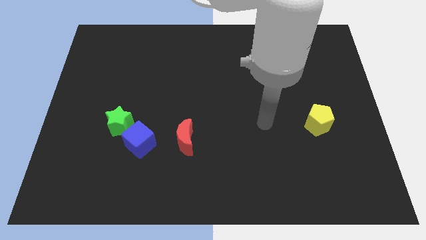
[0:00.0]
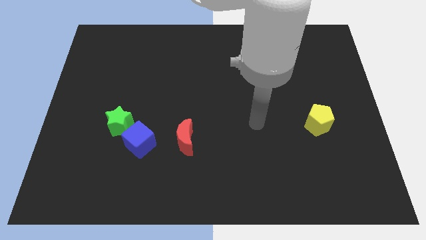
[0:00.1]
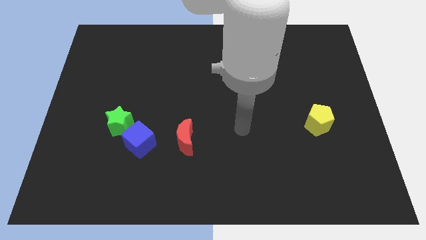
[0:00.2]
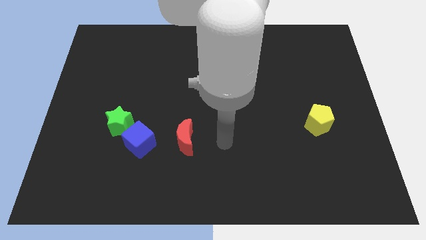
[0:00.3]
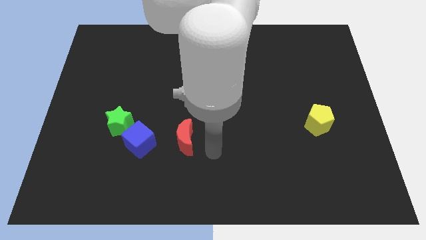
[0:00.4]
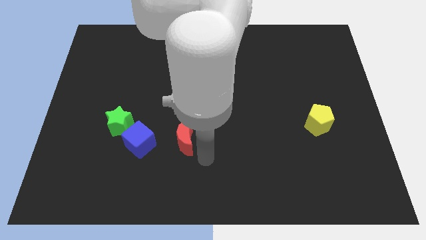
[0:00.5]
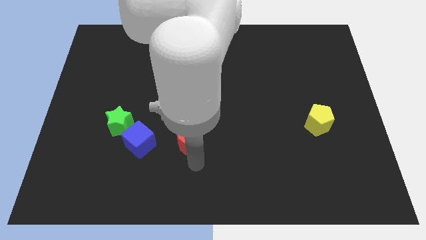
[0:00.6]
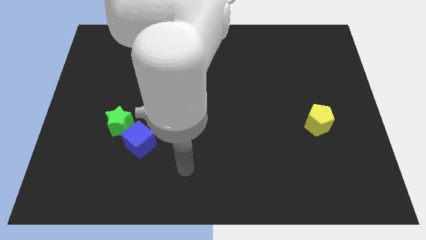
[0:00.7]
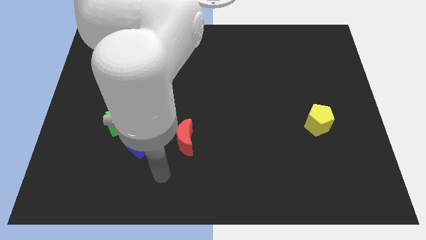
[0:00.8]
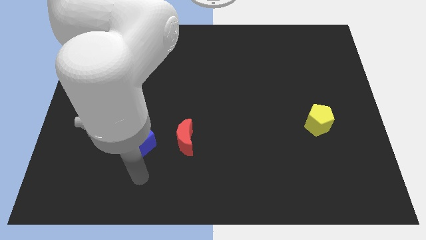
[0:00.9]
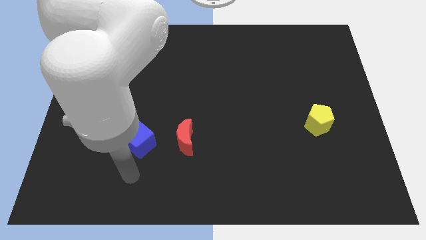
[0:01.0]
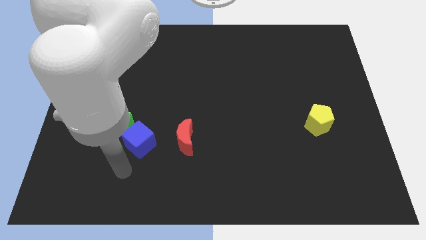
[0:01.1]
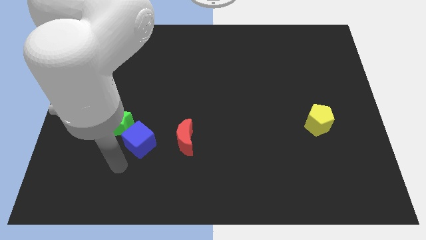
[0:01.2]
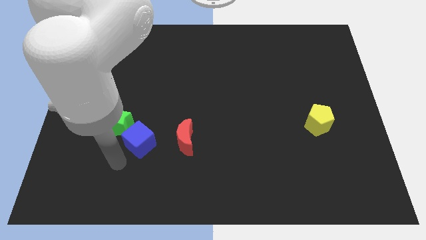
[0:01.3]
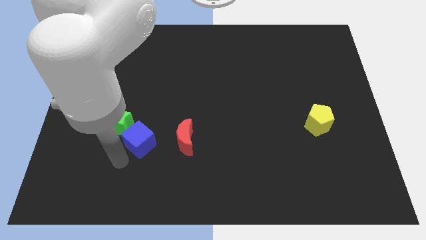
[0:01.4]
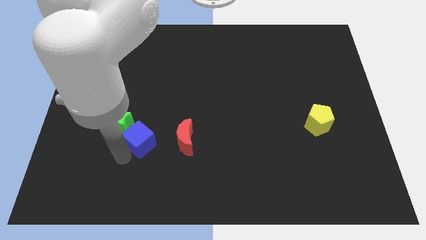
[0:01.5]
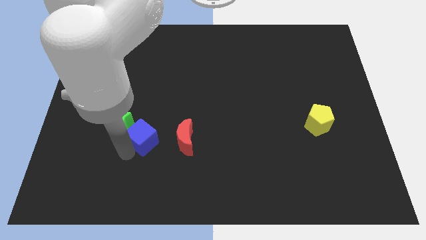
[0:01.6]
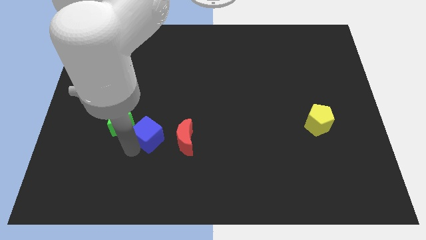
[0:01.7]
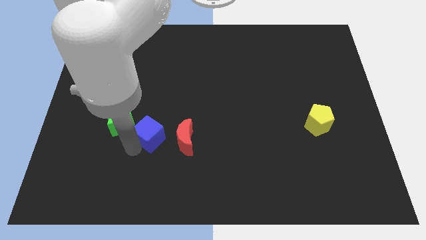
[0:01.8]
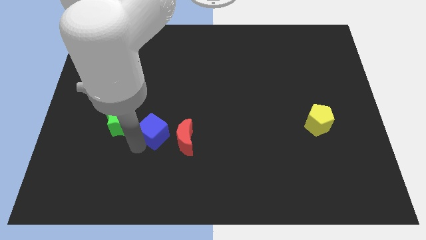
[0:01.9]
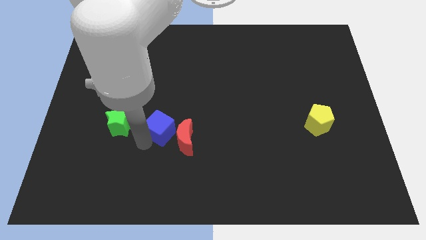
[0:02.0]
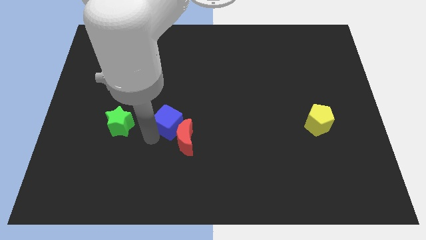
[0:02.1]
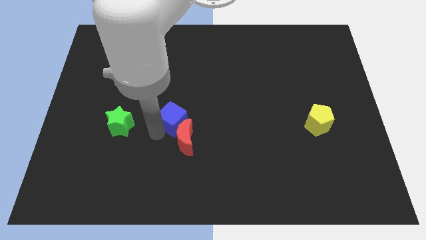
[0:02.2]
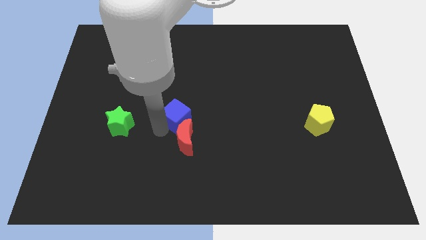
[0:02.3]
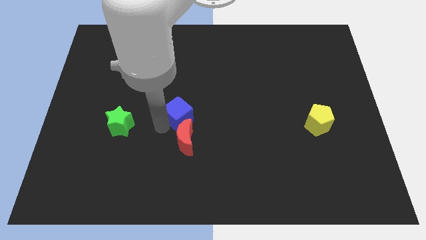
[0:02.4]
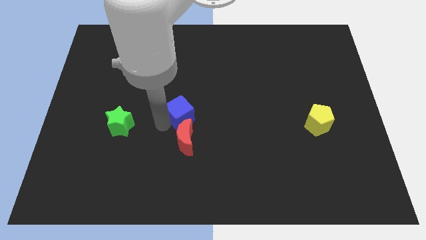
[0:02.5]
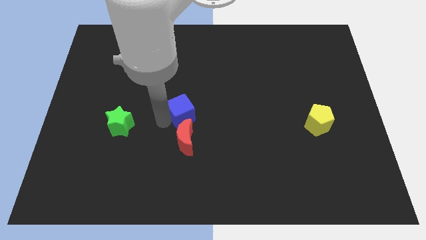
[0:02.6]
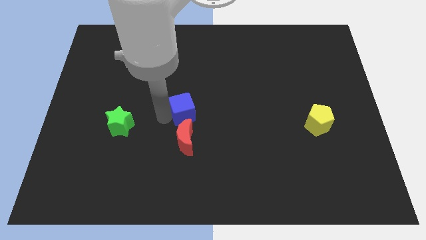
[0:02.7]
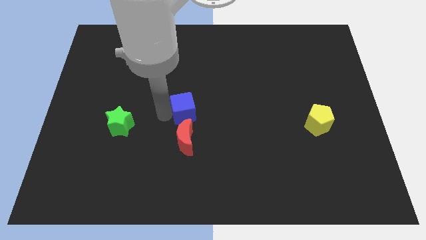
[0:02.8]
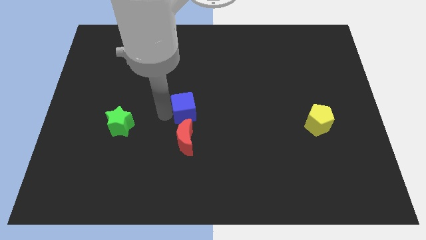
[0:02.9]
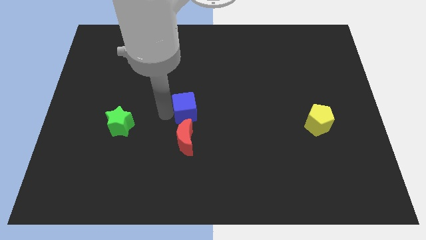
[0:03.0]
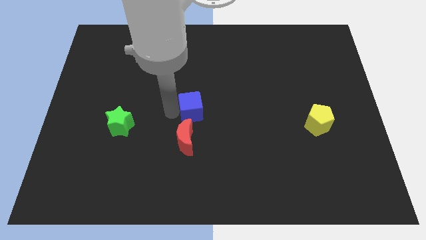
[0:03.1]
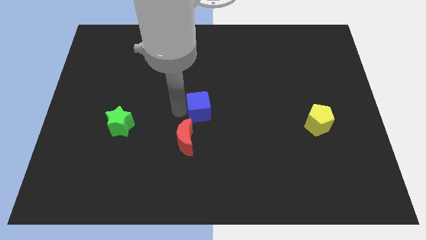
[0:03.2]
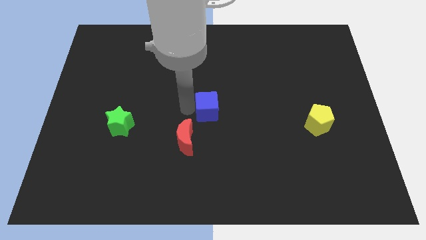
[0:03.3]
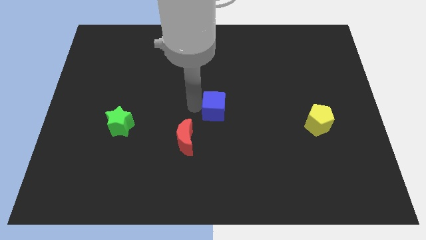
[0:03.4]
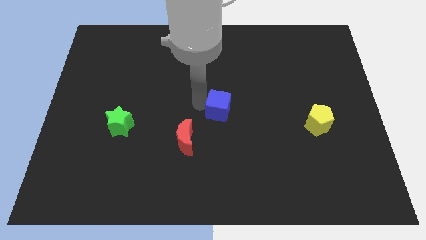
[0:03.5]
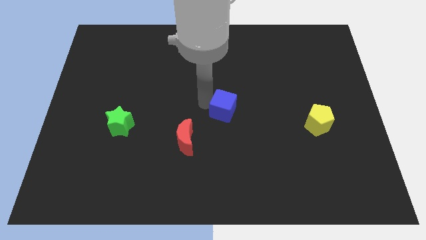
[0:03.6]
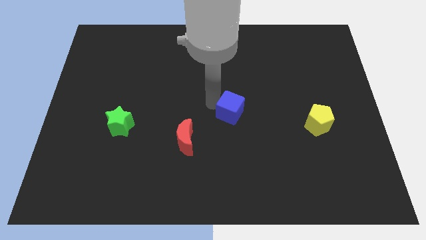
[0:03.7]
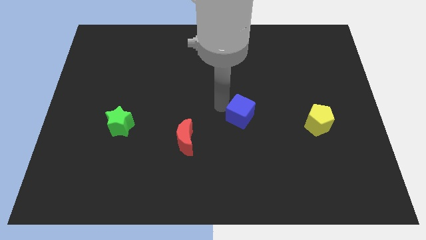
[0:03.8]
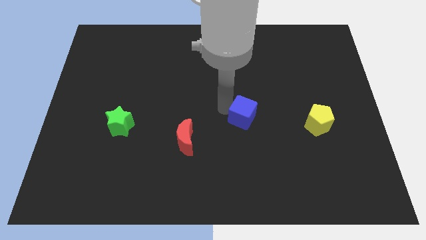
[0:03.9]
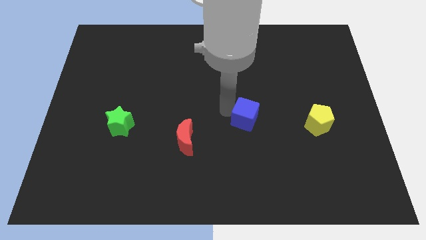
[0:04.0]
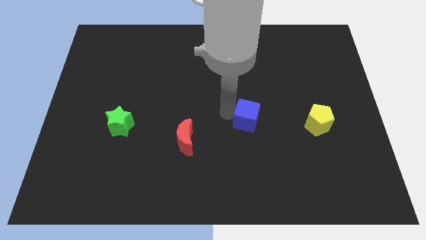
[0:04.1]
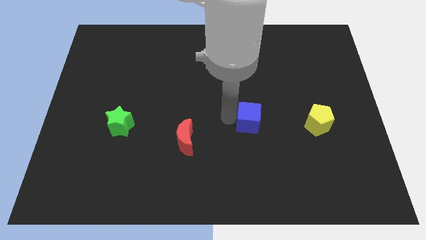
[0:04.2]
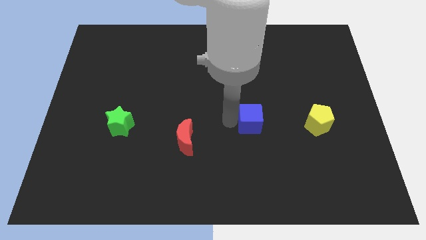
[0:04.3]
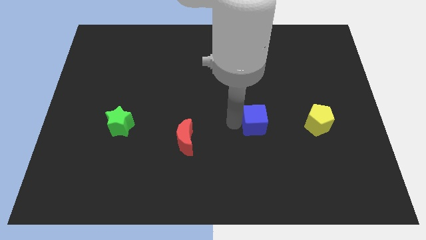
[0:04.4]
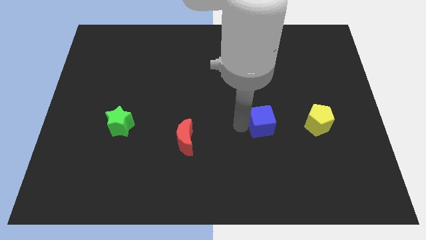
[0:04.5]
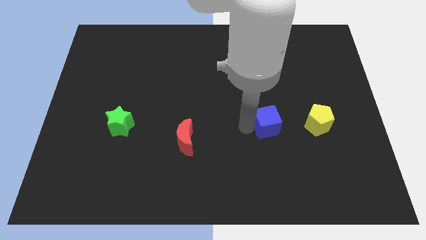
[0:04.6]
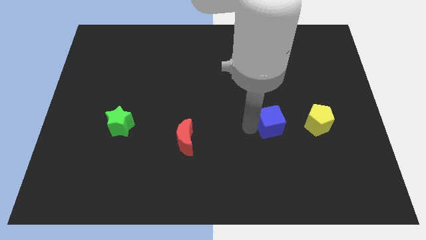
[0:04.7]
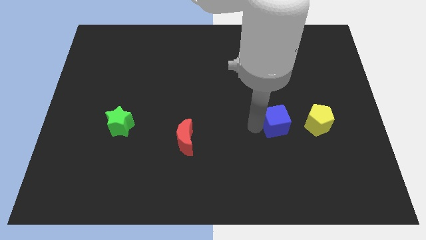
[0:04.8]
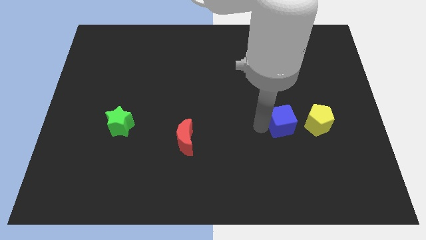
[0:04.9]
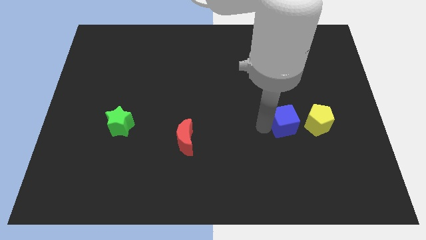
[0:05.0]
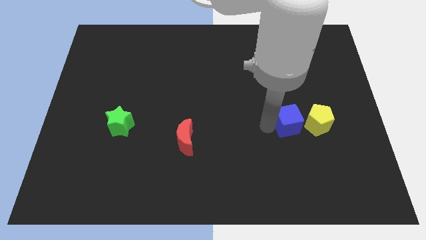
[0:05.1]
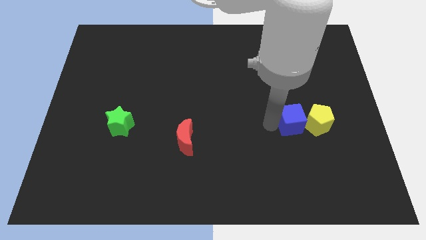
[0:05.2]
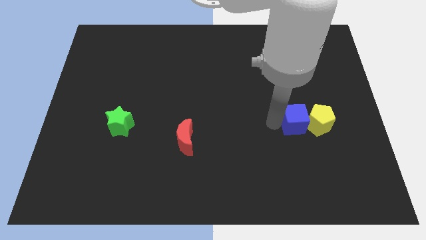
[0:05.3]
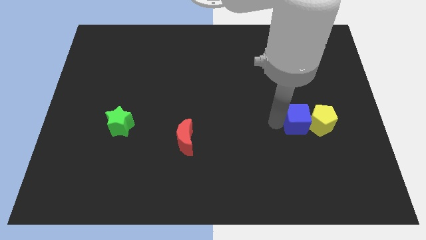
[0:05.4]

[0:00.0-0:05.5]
put the blue block to the yellow pentagon

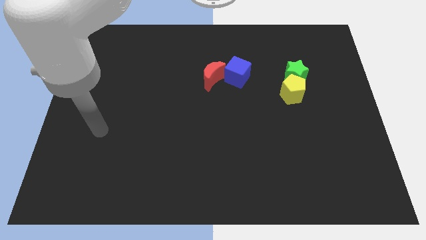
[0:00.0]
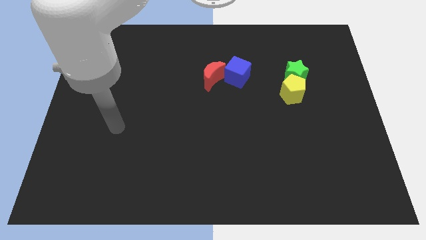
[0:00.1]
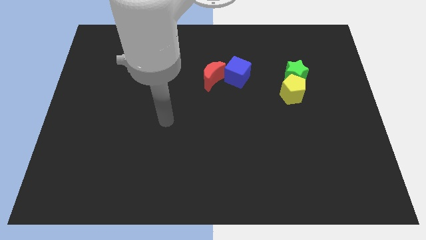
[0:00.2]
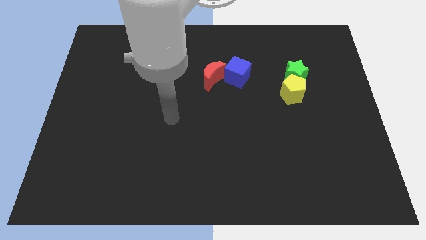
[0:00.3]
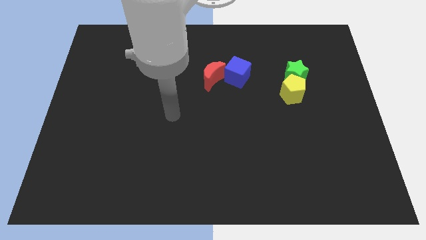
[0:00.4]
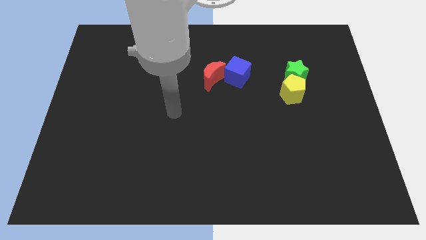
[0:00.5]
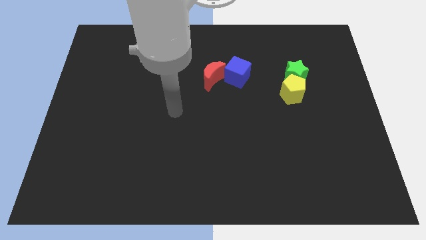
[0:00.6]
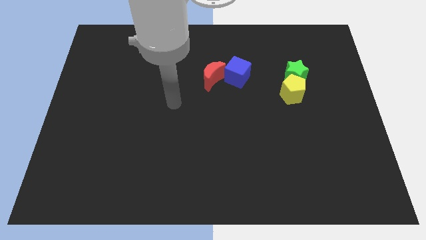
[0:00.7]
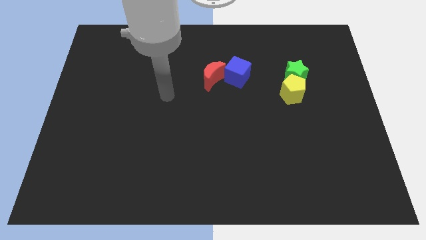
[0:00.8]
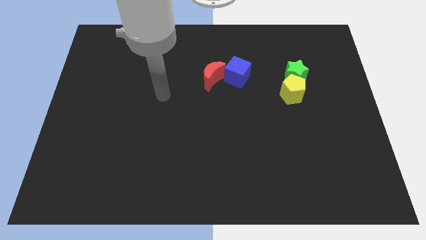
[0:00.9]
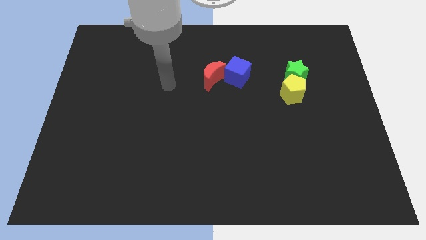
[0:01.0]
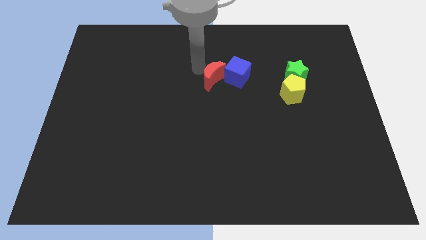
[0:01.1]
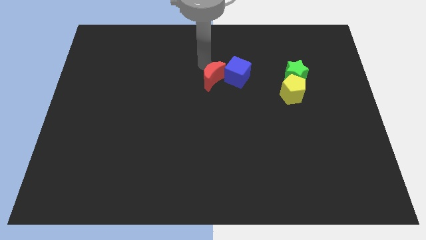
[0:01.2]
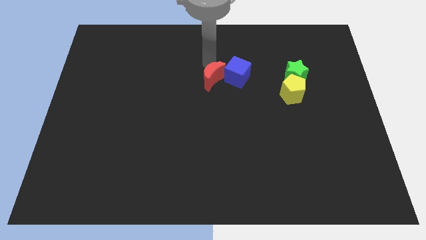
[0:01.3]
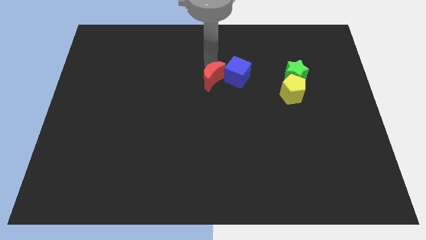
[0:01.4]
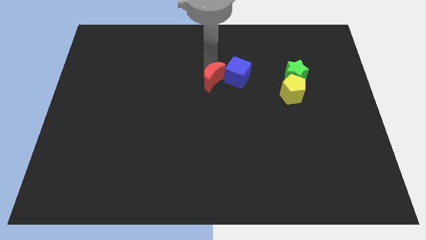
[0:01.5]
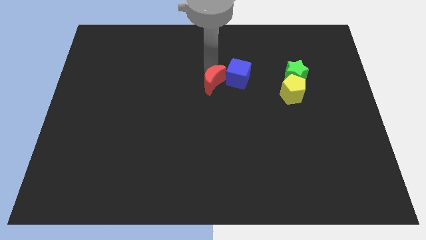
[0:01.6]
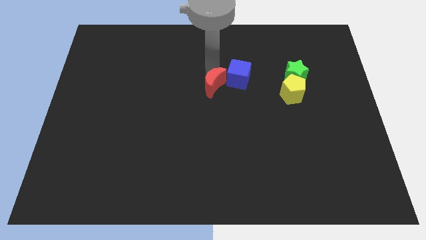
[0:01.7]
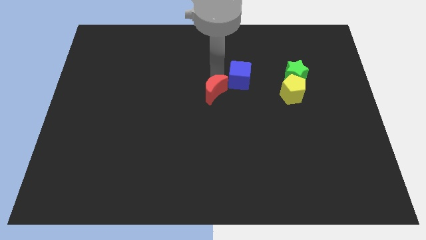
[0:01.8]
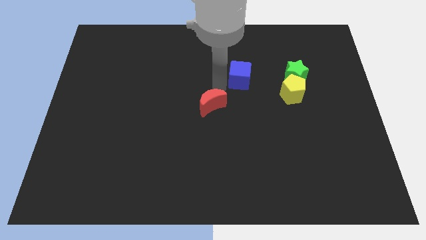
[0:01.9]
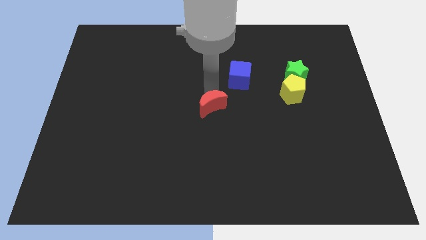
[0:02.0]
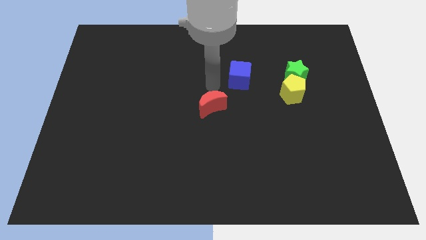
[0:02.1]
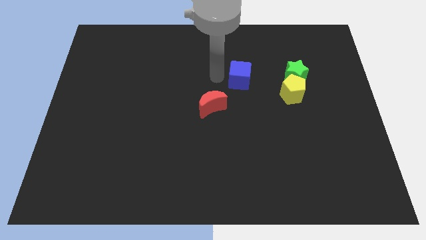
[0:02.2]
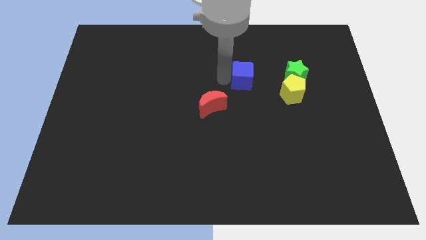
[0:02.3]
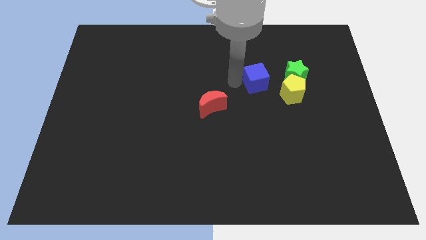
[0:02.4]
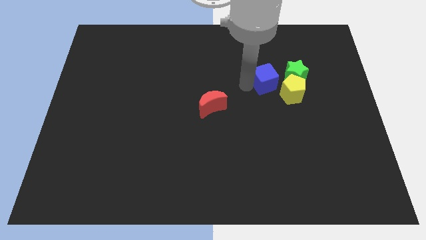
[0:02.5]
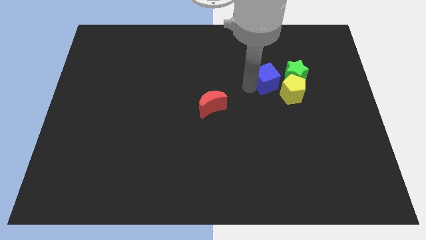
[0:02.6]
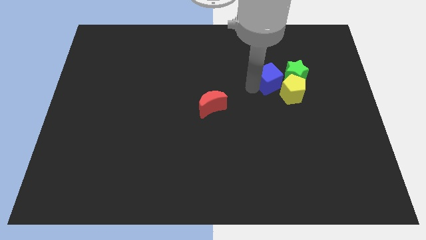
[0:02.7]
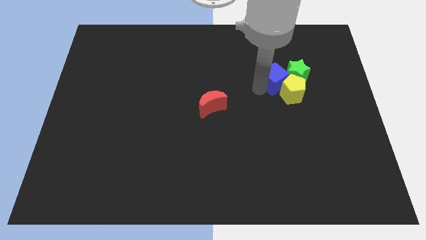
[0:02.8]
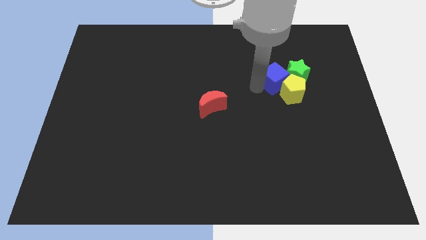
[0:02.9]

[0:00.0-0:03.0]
push the cube next to the yellow block
